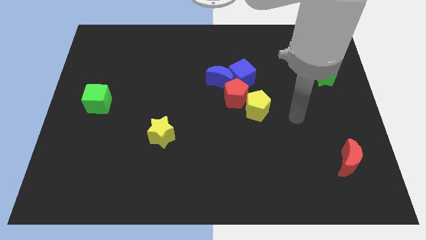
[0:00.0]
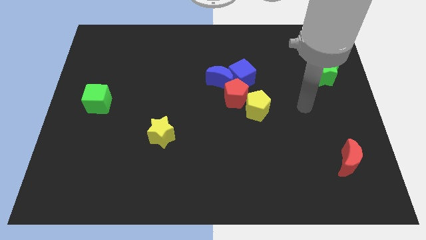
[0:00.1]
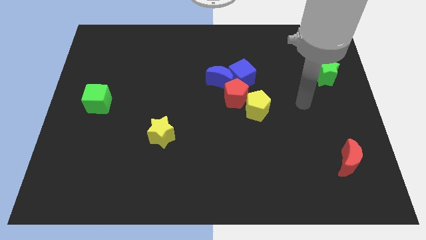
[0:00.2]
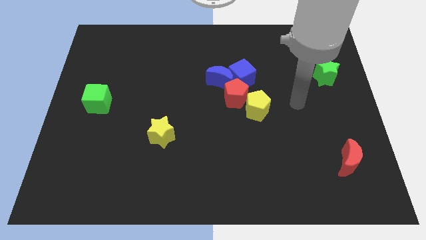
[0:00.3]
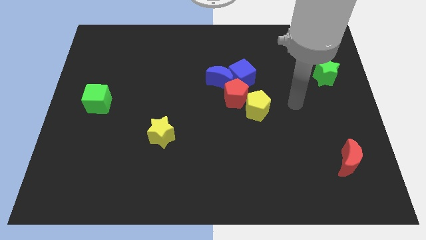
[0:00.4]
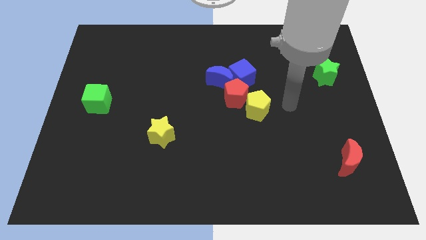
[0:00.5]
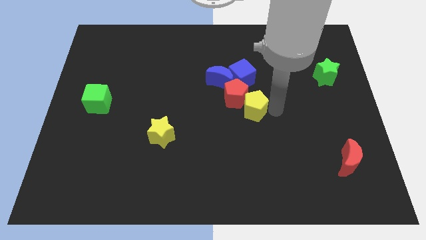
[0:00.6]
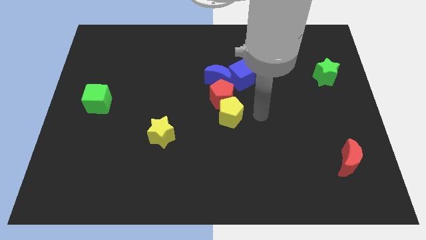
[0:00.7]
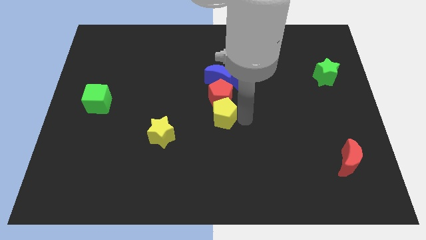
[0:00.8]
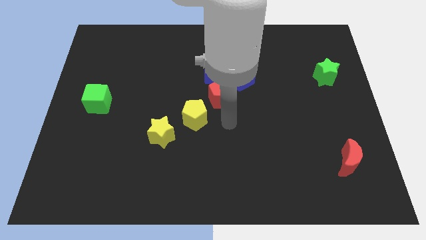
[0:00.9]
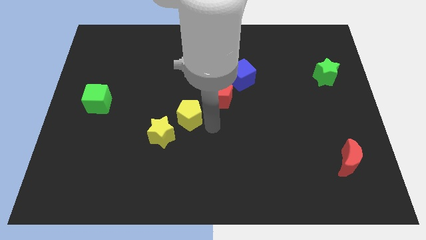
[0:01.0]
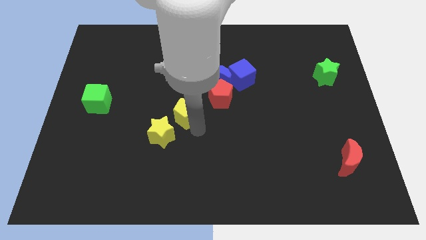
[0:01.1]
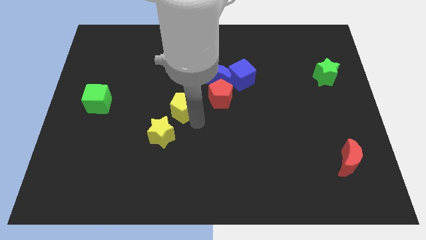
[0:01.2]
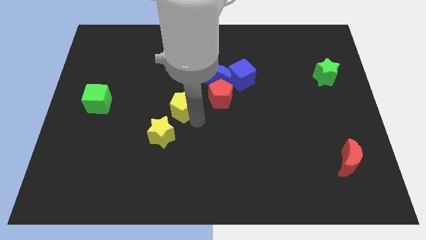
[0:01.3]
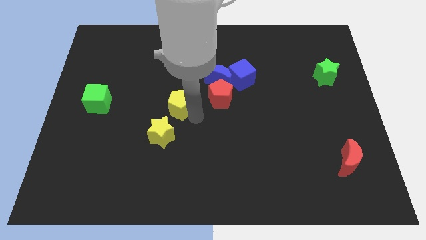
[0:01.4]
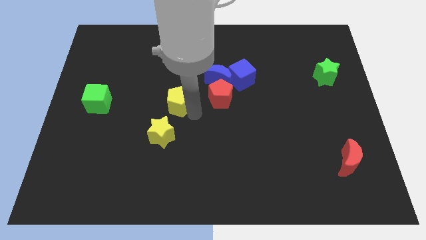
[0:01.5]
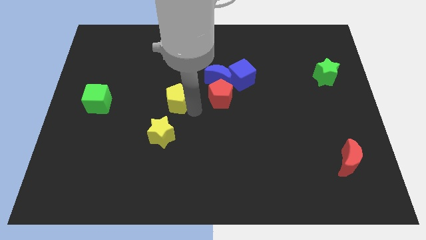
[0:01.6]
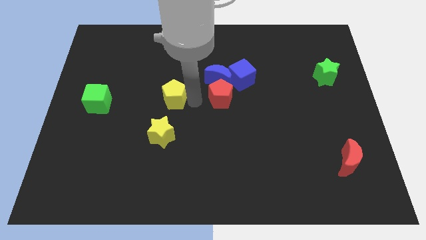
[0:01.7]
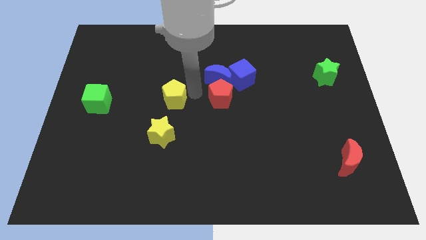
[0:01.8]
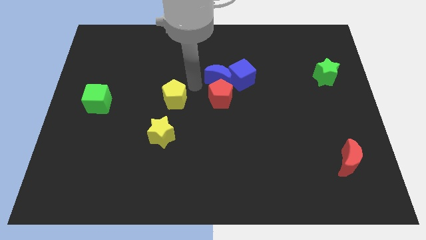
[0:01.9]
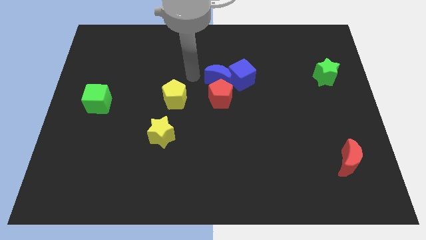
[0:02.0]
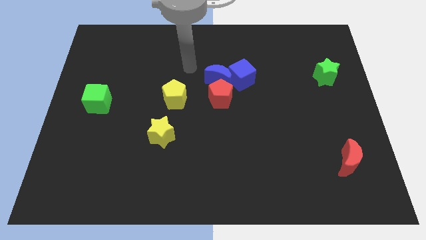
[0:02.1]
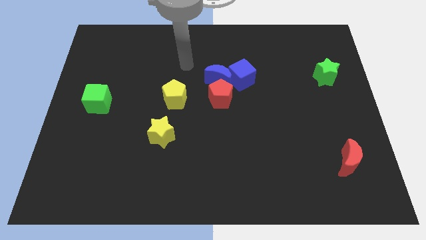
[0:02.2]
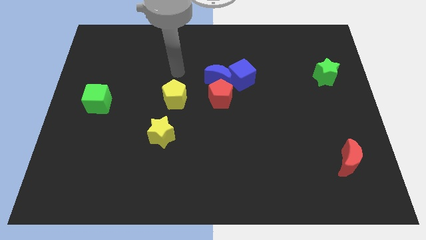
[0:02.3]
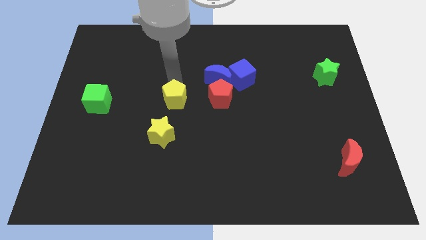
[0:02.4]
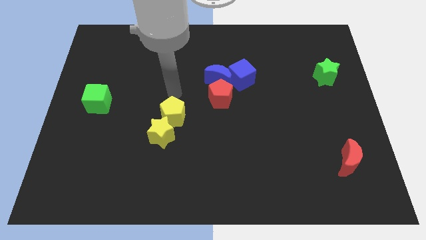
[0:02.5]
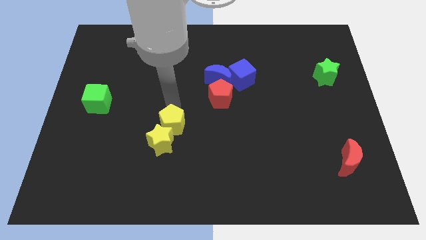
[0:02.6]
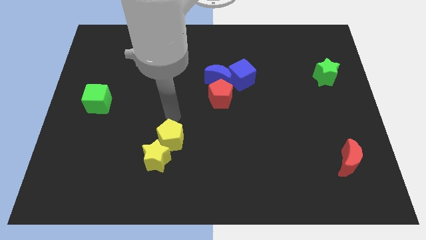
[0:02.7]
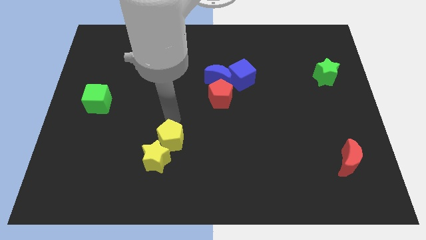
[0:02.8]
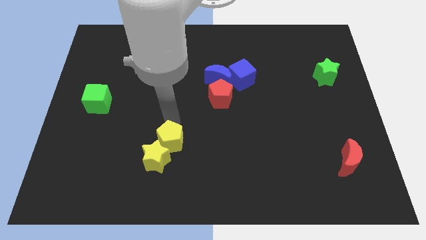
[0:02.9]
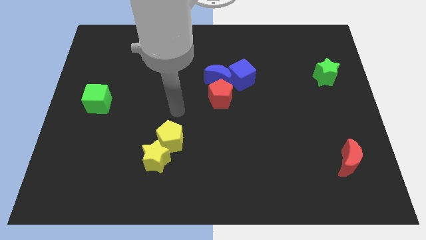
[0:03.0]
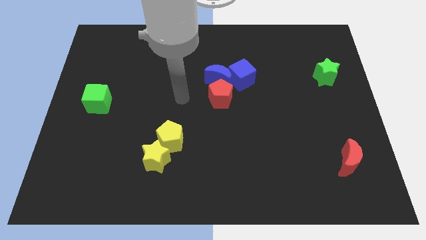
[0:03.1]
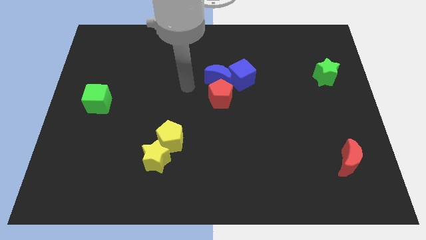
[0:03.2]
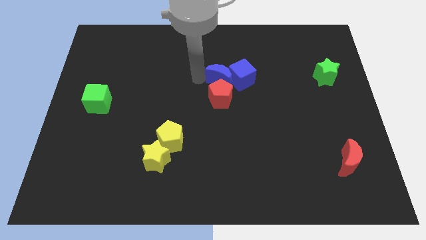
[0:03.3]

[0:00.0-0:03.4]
push the yellow pentagon into the yellow star

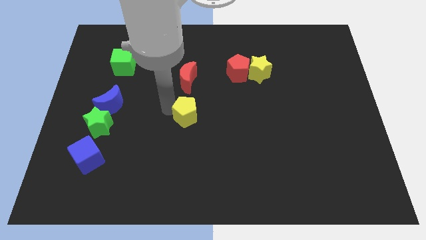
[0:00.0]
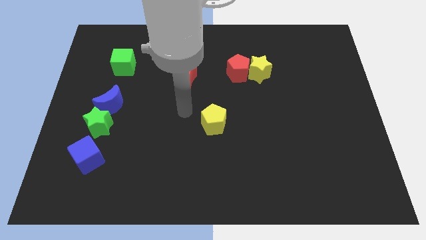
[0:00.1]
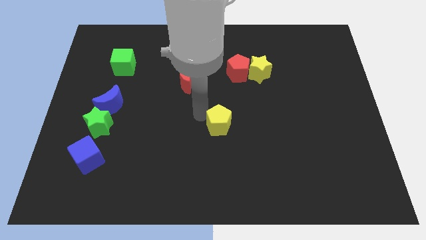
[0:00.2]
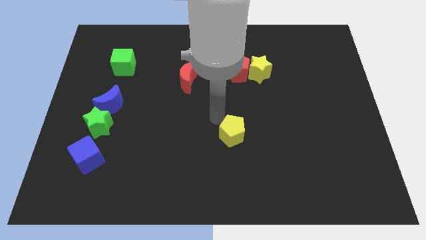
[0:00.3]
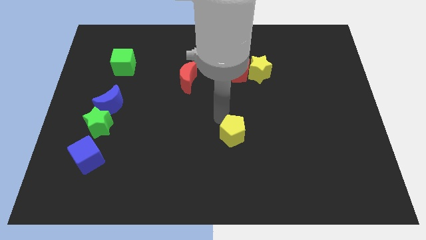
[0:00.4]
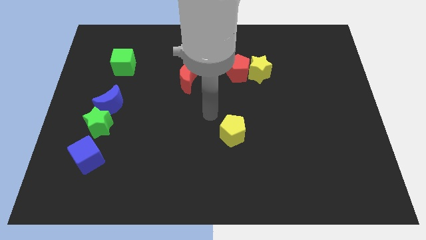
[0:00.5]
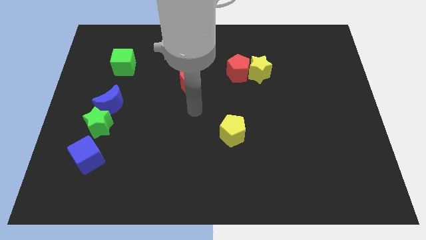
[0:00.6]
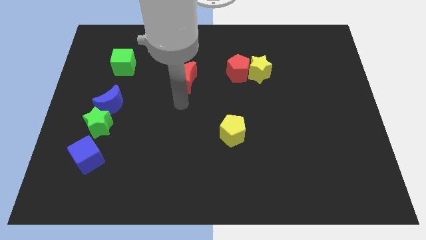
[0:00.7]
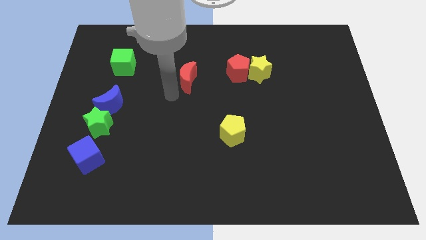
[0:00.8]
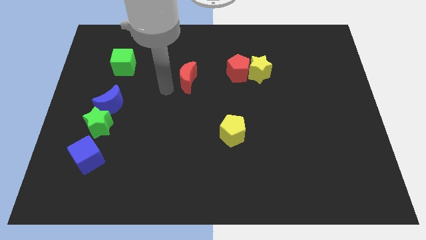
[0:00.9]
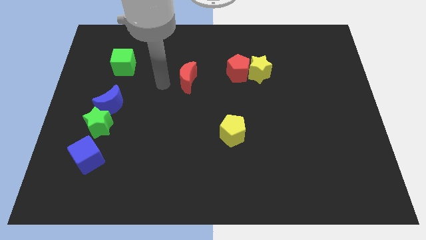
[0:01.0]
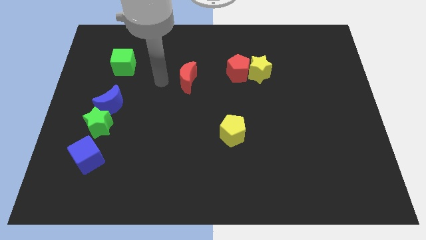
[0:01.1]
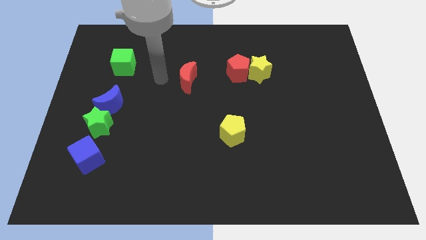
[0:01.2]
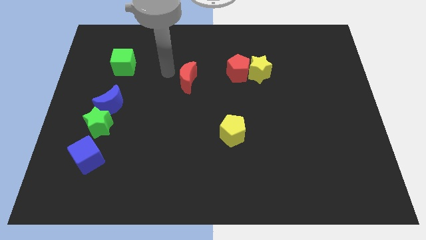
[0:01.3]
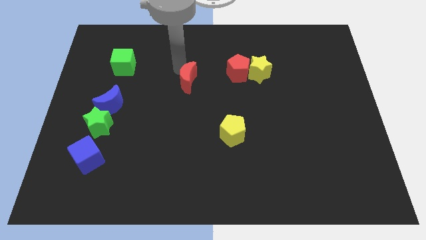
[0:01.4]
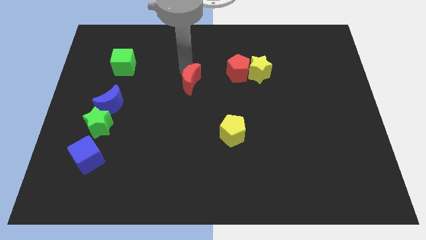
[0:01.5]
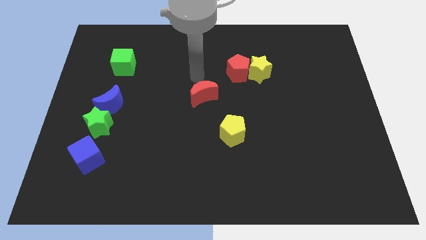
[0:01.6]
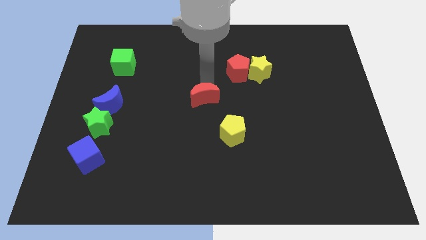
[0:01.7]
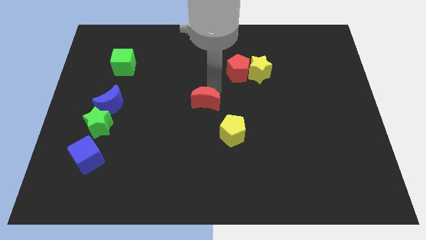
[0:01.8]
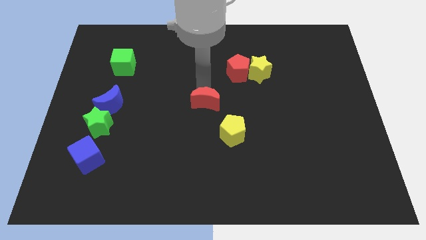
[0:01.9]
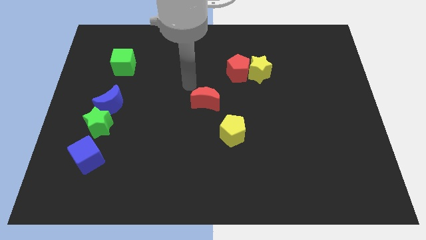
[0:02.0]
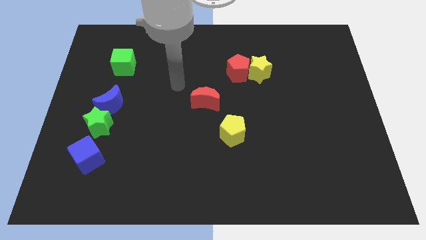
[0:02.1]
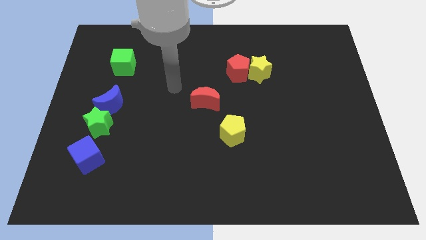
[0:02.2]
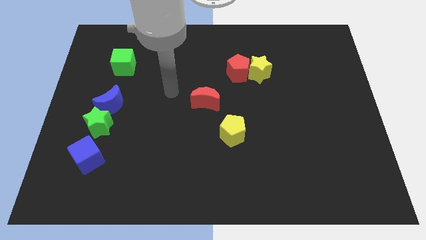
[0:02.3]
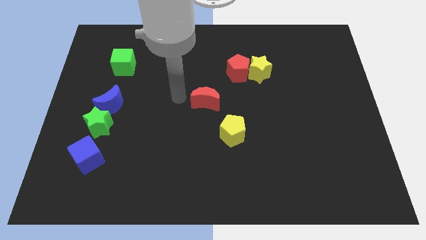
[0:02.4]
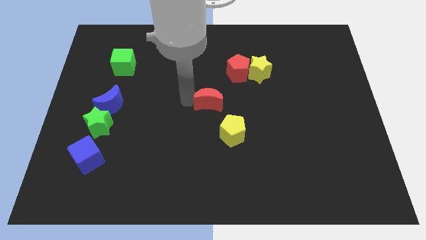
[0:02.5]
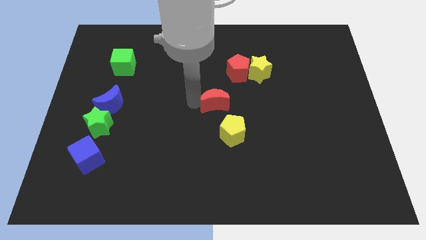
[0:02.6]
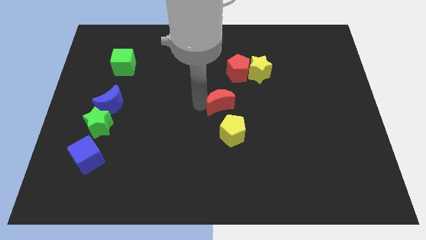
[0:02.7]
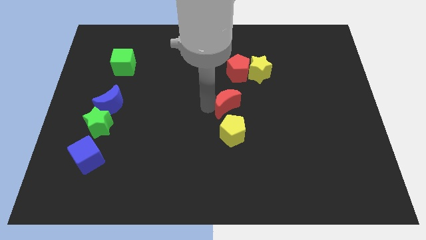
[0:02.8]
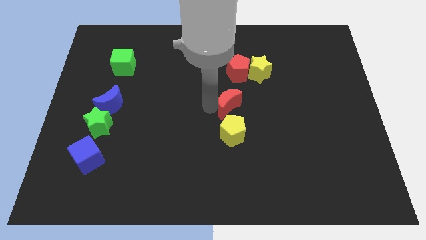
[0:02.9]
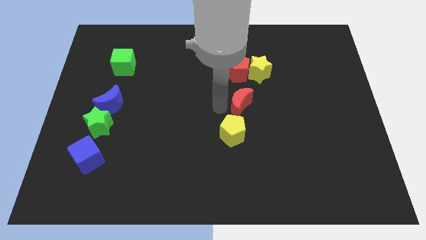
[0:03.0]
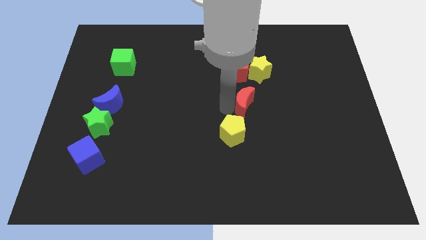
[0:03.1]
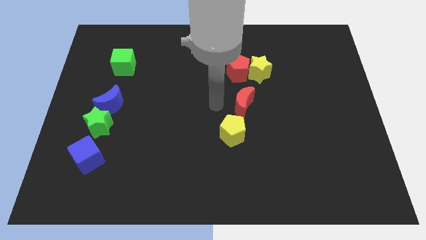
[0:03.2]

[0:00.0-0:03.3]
place red crescent at the top of yellow pentagon

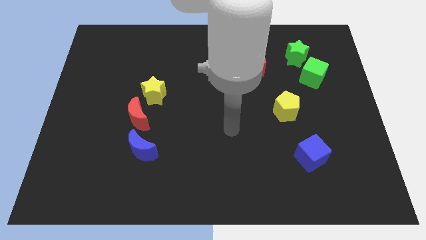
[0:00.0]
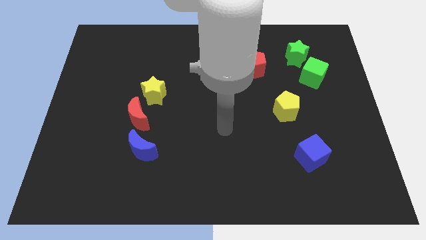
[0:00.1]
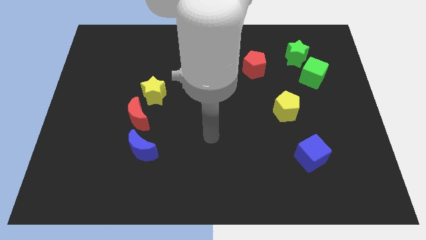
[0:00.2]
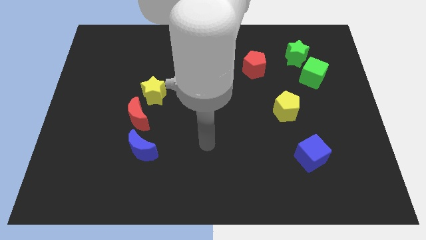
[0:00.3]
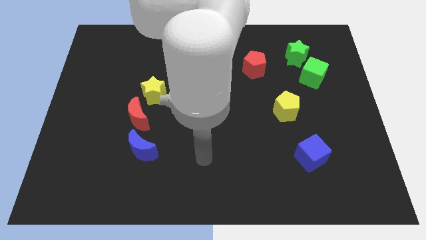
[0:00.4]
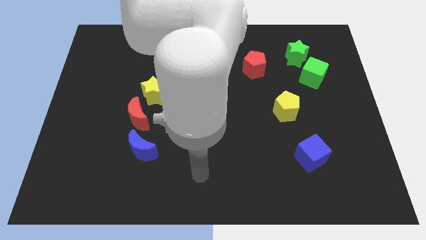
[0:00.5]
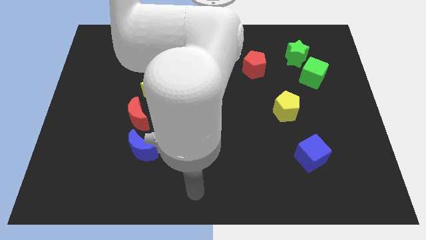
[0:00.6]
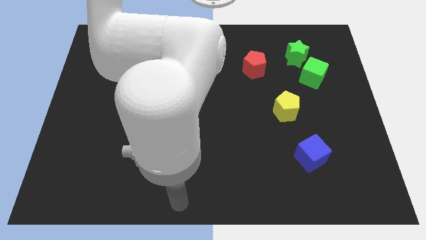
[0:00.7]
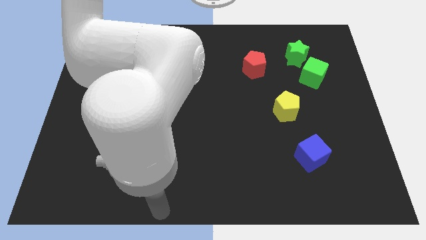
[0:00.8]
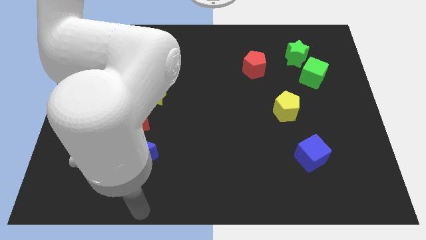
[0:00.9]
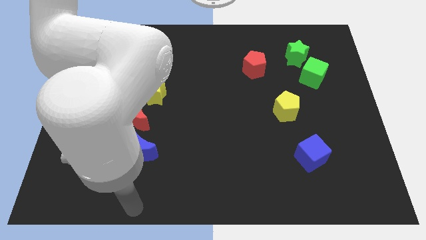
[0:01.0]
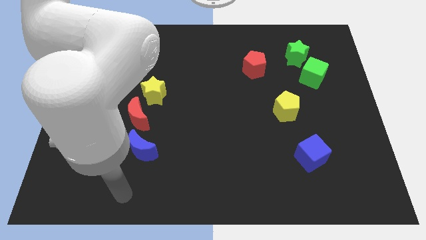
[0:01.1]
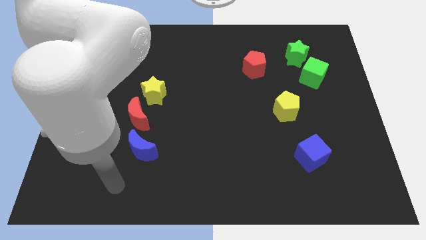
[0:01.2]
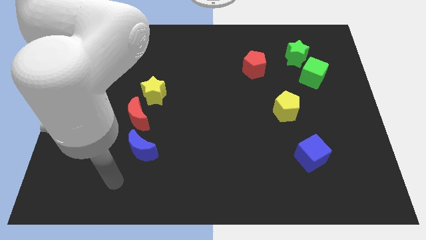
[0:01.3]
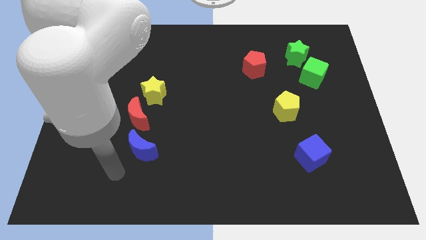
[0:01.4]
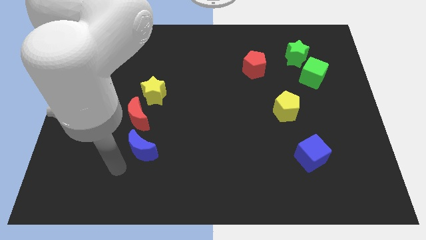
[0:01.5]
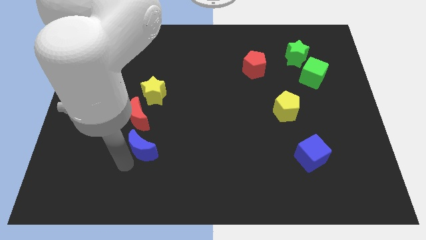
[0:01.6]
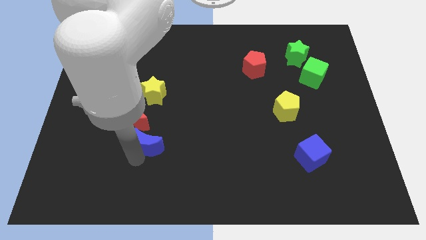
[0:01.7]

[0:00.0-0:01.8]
move your arm near the blue moon

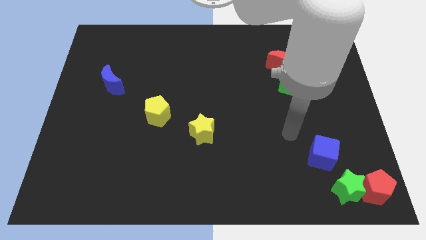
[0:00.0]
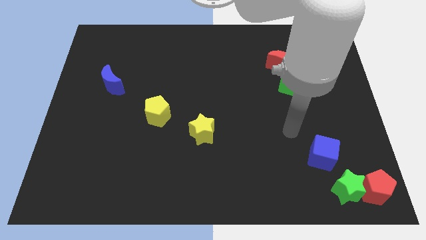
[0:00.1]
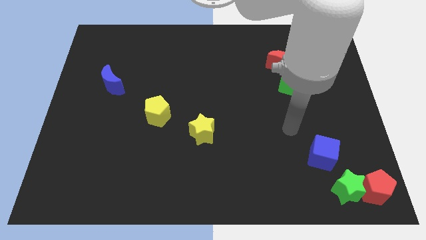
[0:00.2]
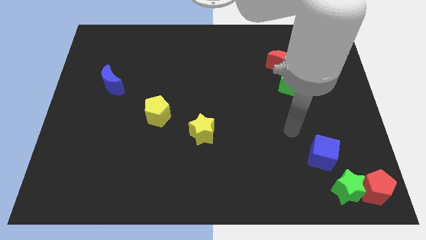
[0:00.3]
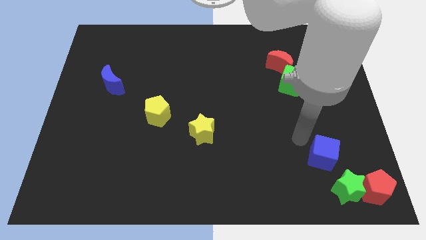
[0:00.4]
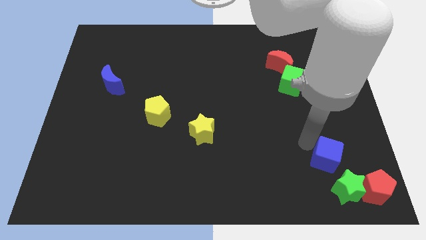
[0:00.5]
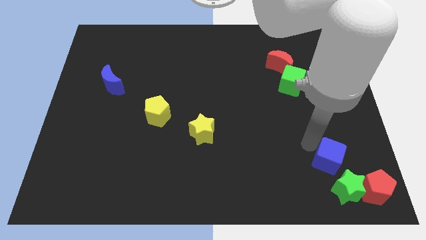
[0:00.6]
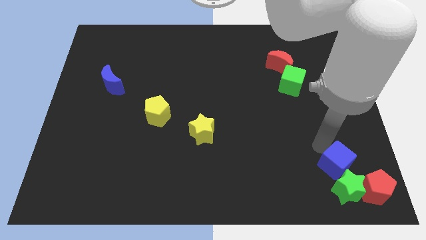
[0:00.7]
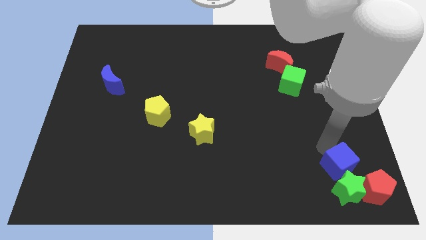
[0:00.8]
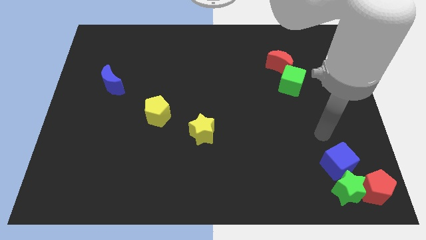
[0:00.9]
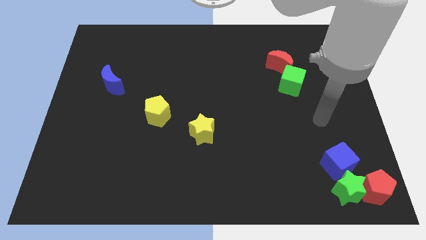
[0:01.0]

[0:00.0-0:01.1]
place the blue cube above the green star
